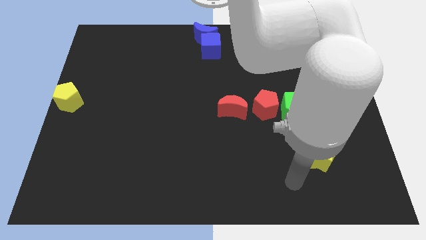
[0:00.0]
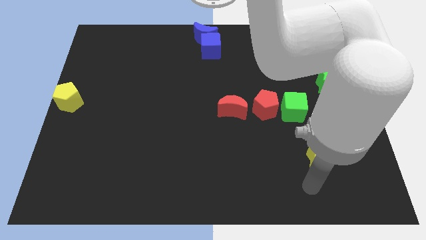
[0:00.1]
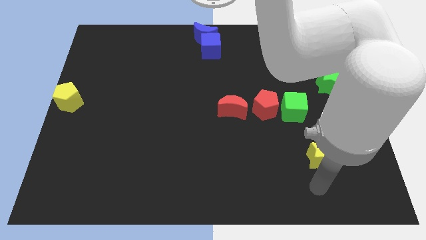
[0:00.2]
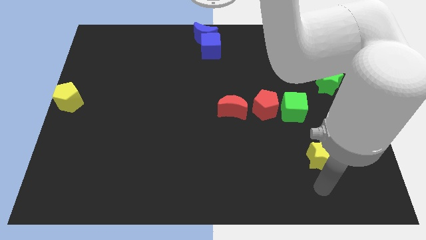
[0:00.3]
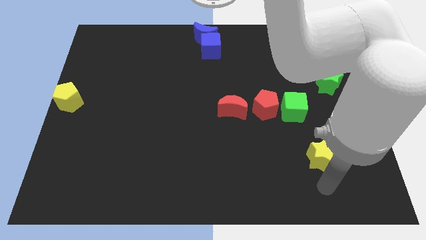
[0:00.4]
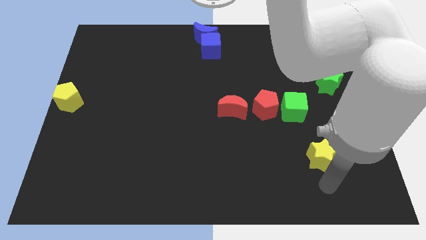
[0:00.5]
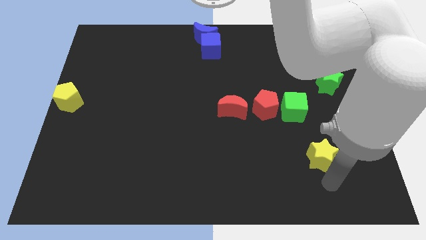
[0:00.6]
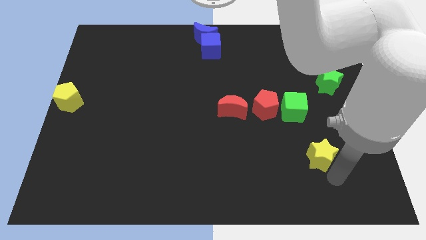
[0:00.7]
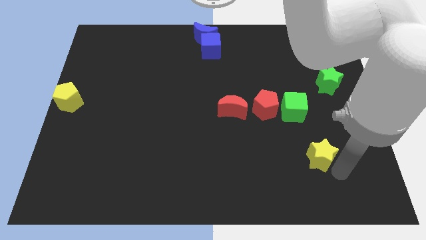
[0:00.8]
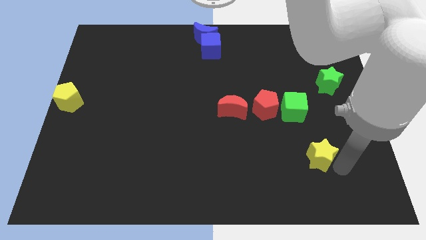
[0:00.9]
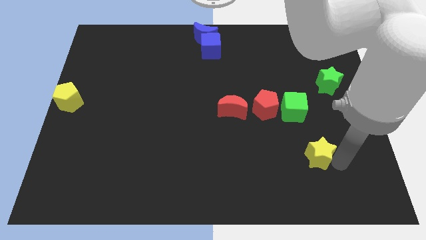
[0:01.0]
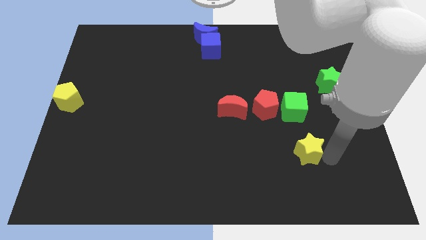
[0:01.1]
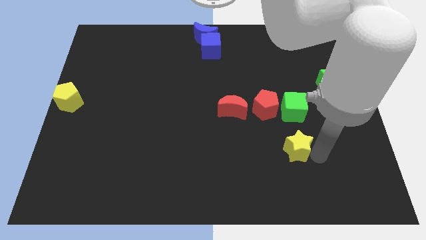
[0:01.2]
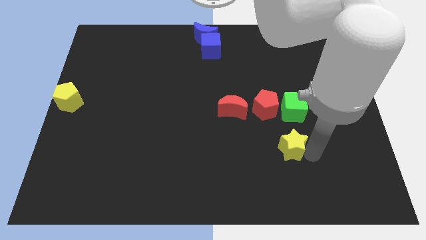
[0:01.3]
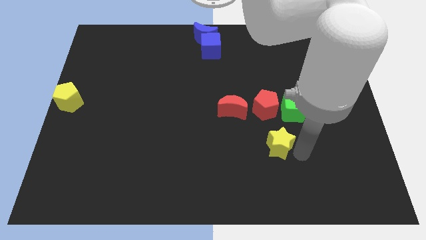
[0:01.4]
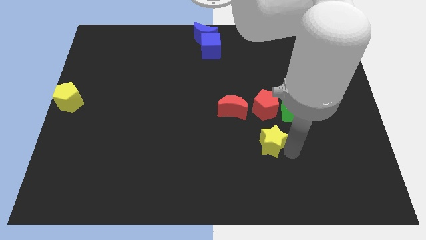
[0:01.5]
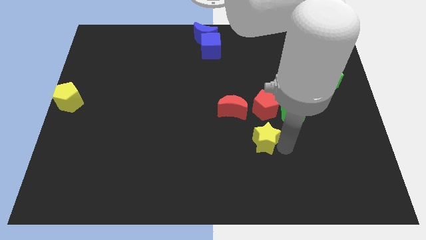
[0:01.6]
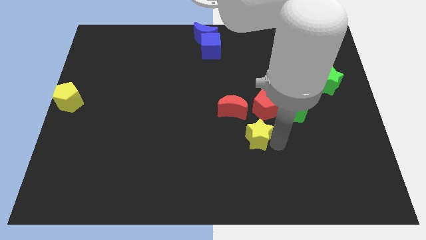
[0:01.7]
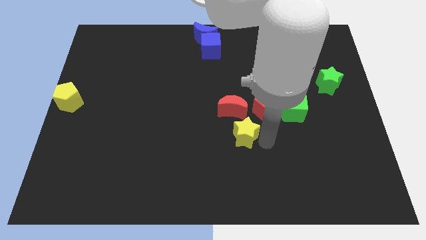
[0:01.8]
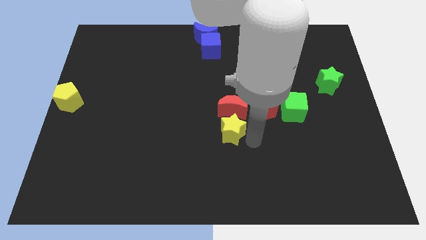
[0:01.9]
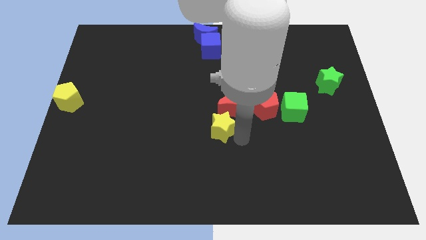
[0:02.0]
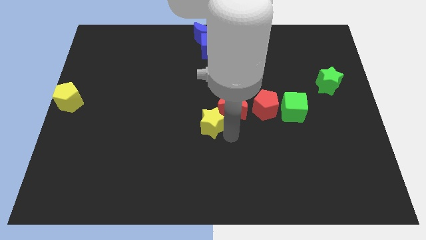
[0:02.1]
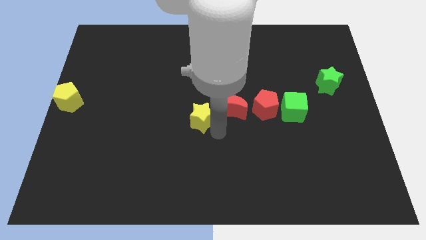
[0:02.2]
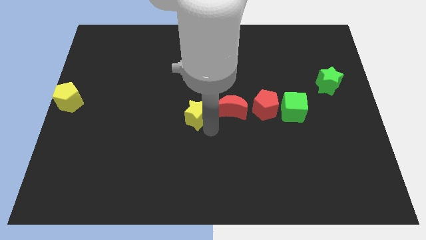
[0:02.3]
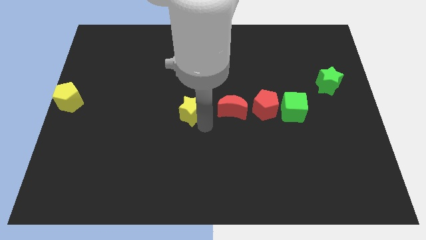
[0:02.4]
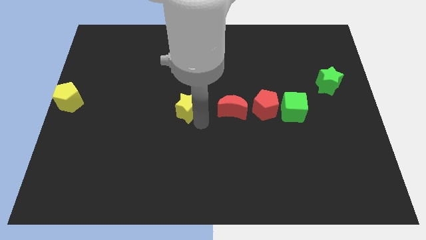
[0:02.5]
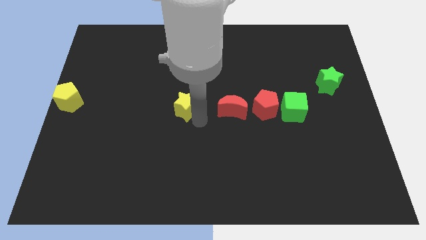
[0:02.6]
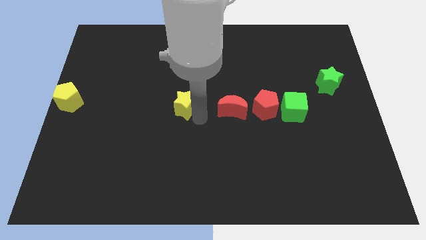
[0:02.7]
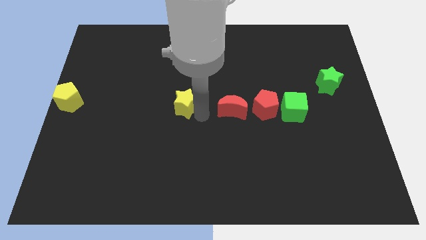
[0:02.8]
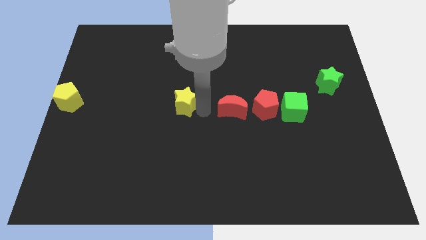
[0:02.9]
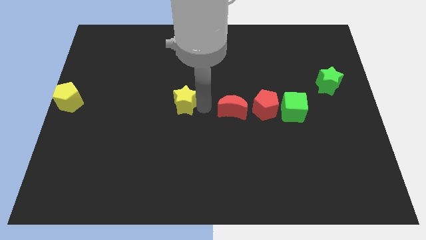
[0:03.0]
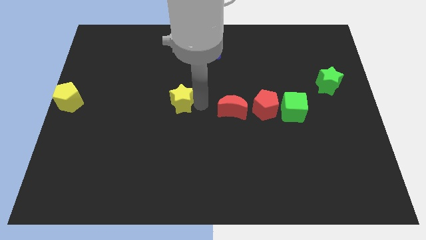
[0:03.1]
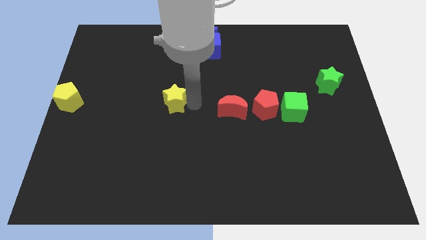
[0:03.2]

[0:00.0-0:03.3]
push the yellow star to the left side of the red moon

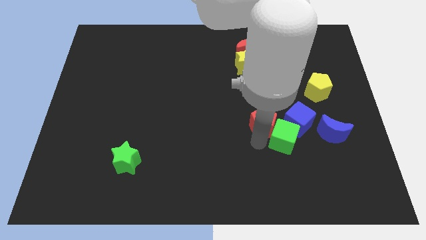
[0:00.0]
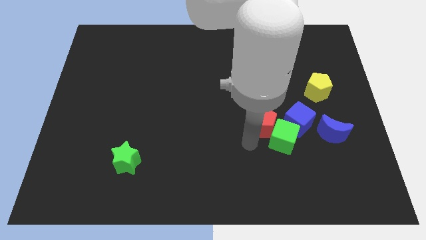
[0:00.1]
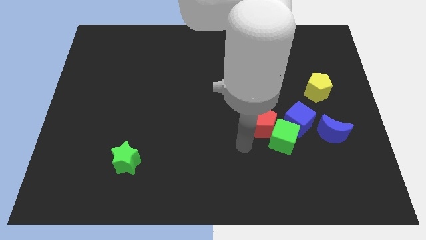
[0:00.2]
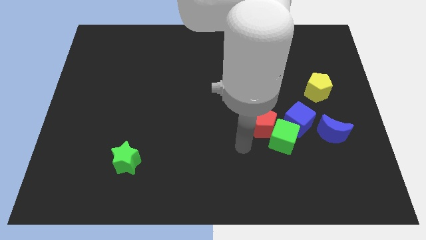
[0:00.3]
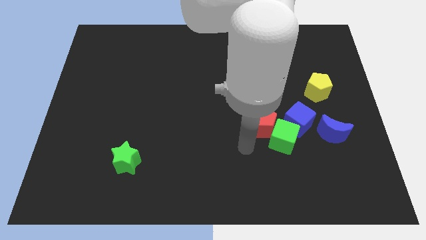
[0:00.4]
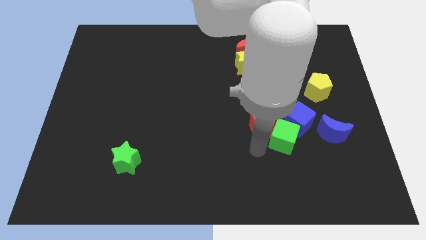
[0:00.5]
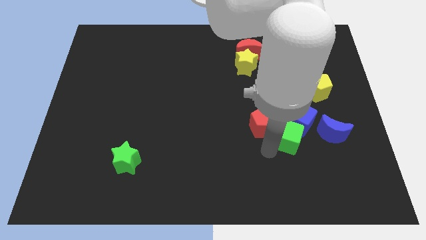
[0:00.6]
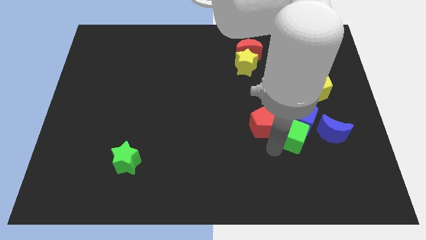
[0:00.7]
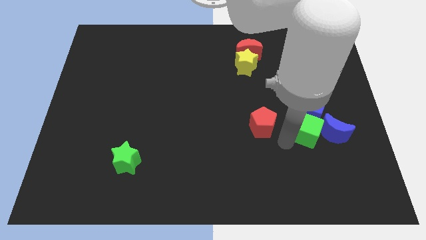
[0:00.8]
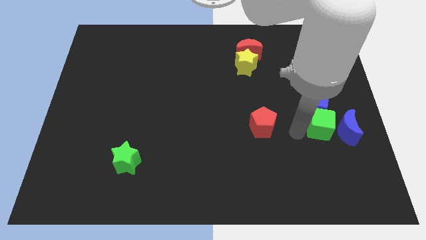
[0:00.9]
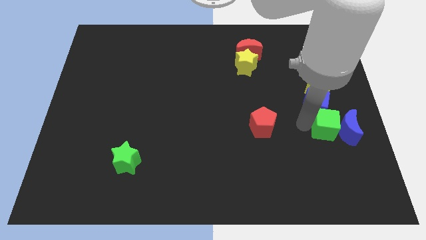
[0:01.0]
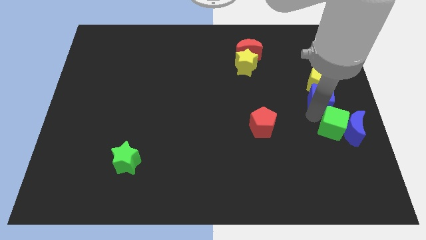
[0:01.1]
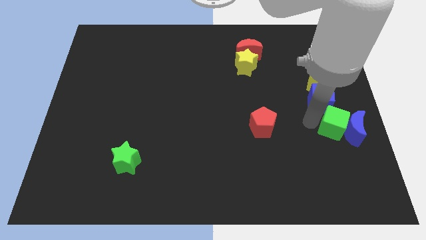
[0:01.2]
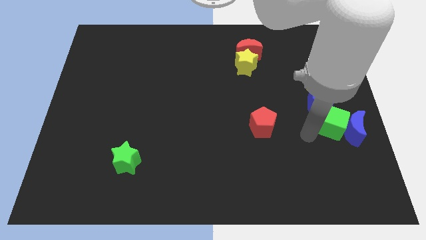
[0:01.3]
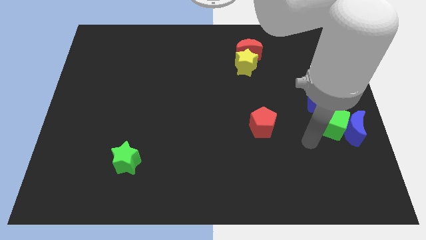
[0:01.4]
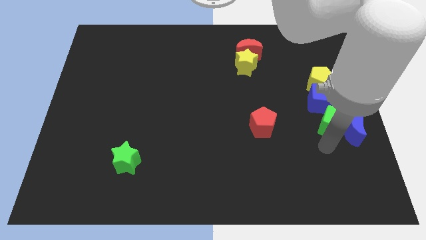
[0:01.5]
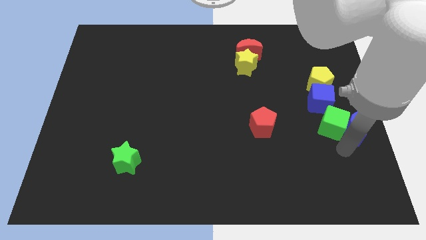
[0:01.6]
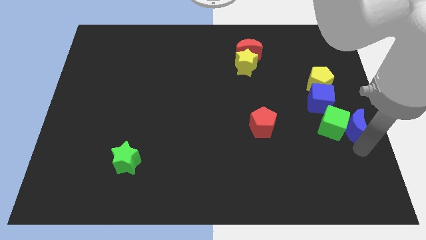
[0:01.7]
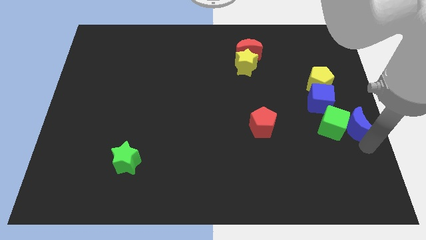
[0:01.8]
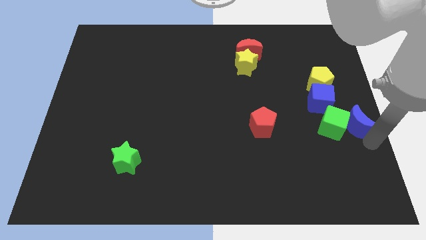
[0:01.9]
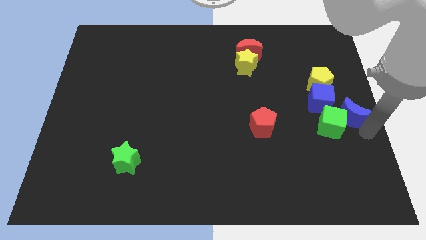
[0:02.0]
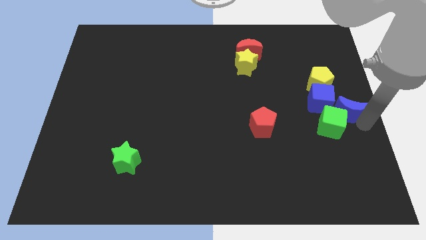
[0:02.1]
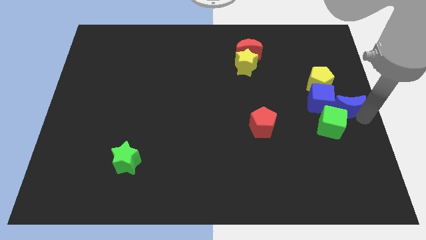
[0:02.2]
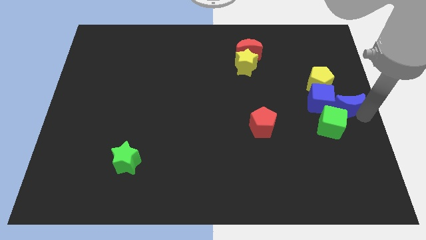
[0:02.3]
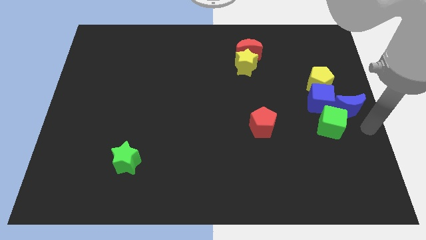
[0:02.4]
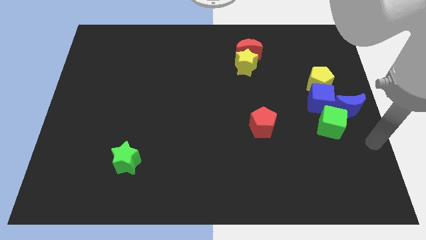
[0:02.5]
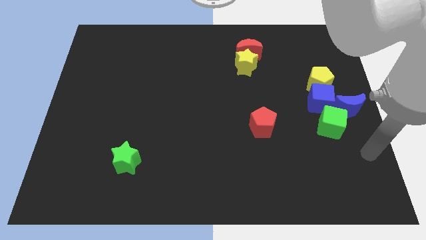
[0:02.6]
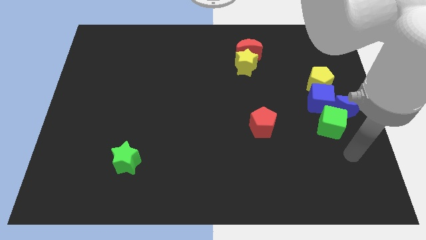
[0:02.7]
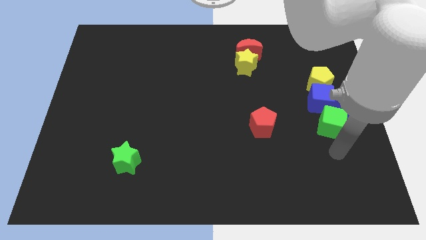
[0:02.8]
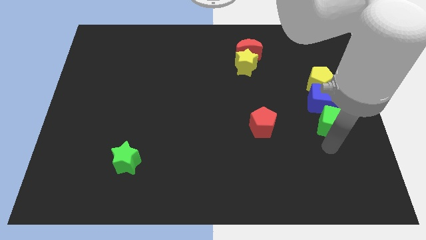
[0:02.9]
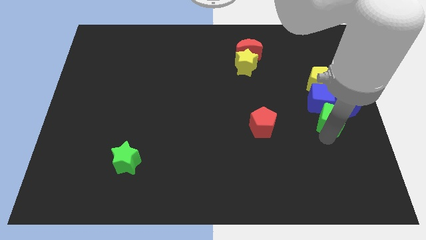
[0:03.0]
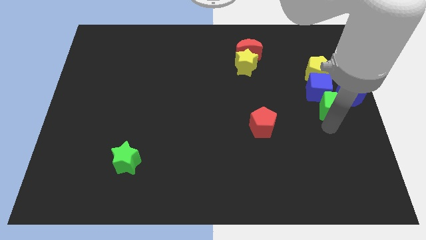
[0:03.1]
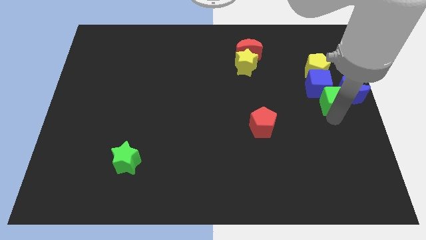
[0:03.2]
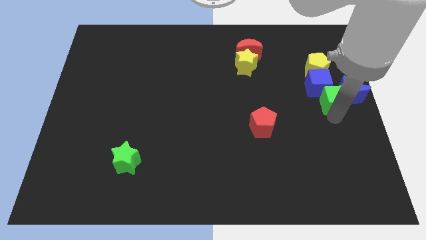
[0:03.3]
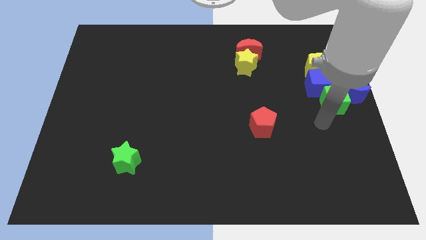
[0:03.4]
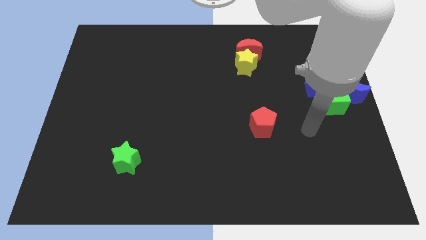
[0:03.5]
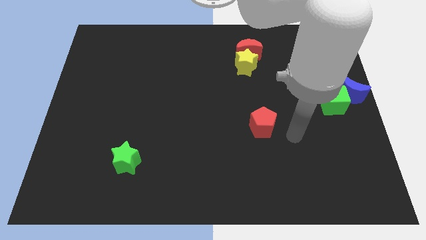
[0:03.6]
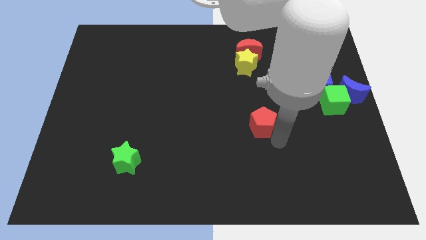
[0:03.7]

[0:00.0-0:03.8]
push the green cube into the blue cube and blue crescent to the top

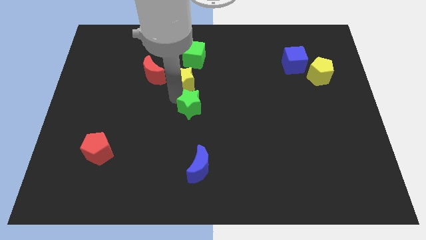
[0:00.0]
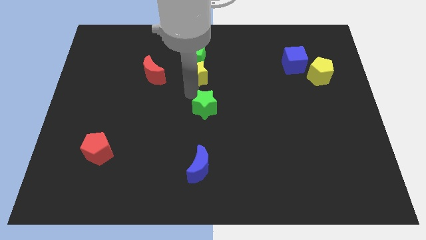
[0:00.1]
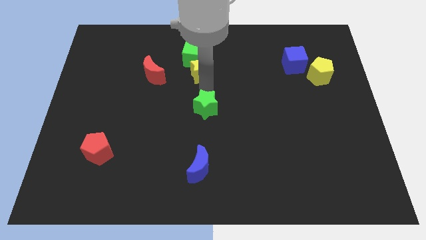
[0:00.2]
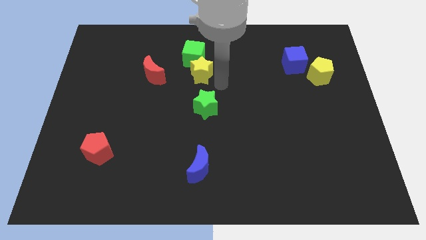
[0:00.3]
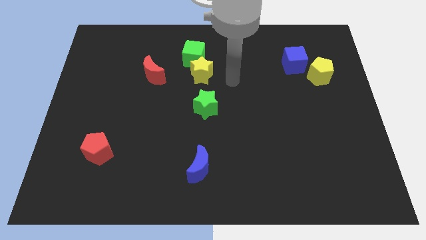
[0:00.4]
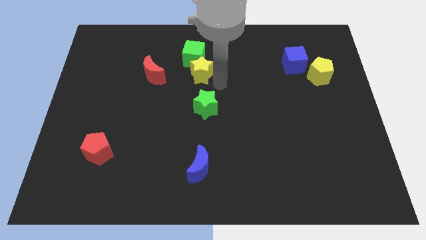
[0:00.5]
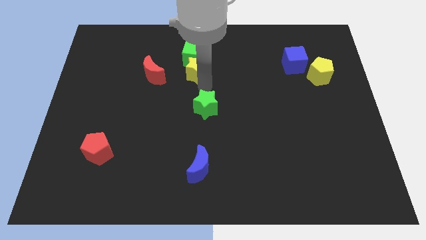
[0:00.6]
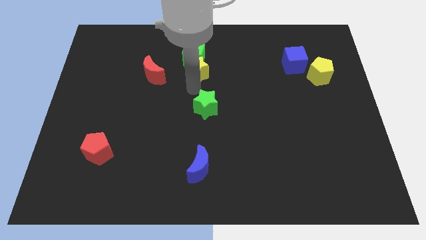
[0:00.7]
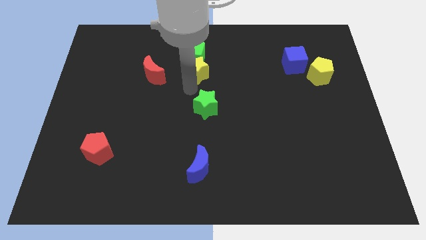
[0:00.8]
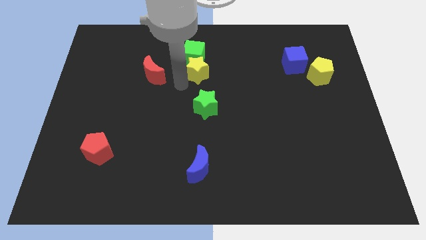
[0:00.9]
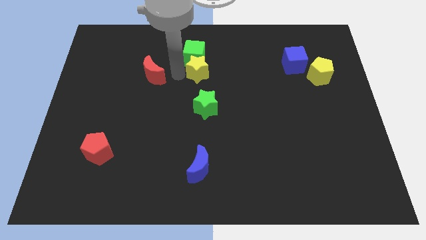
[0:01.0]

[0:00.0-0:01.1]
push yellow star into green cube

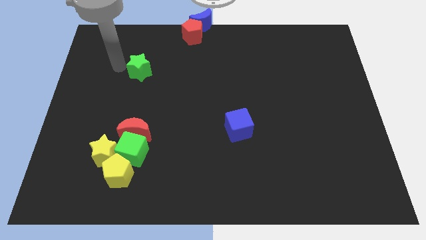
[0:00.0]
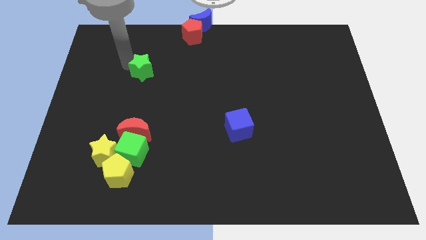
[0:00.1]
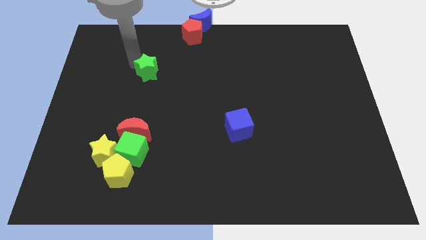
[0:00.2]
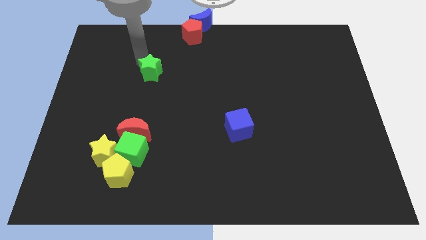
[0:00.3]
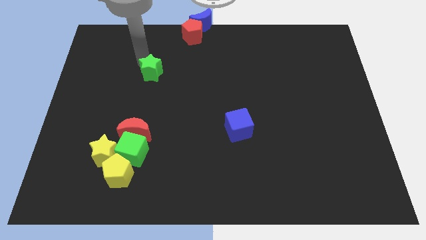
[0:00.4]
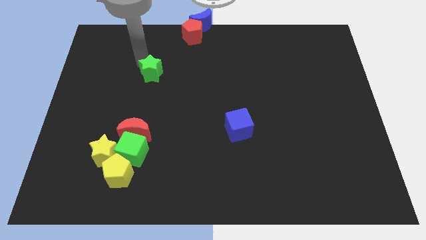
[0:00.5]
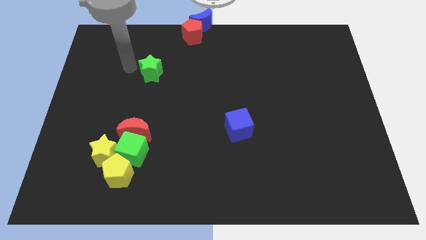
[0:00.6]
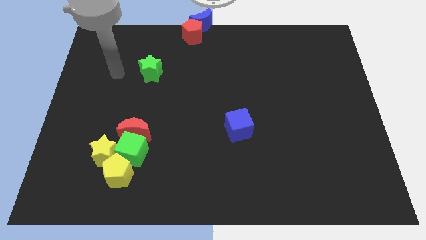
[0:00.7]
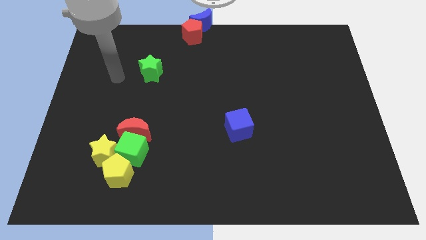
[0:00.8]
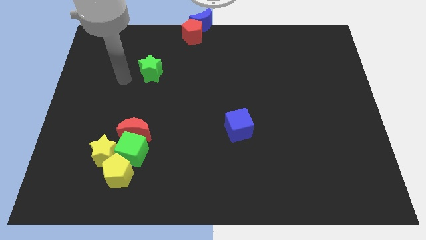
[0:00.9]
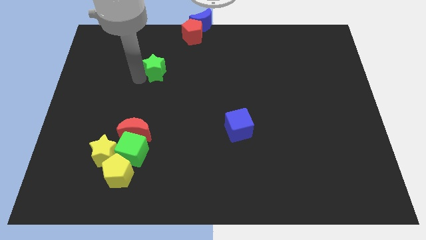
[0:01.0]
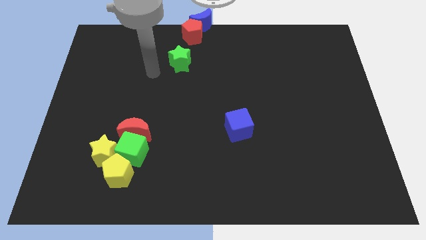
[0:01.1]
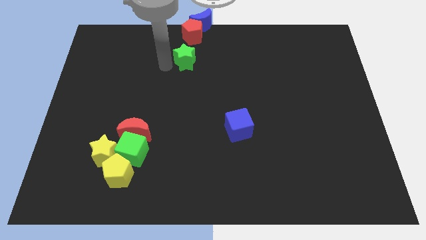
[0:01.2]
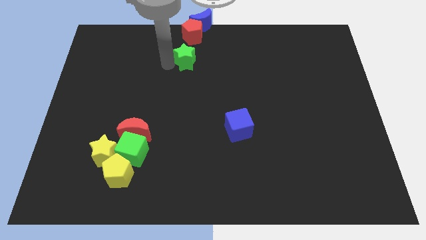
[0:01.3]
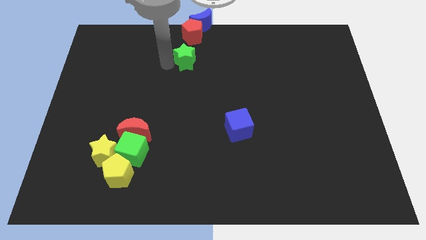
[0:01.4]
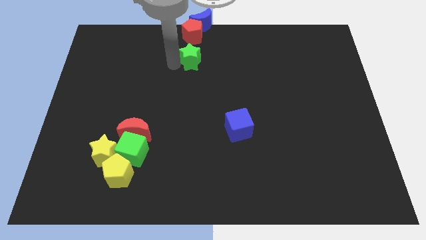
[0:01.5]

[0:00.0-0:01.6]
place the green star vertically below the red pentagon
